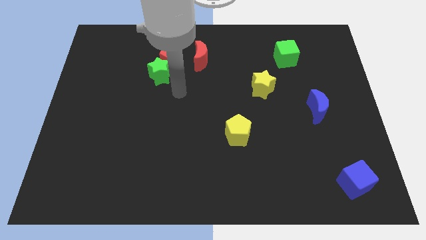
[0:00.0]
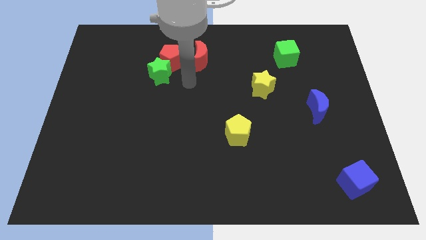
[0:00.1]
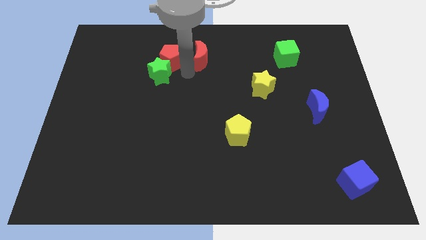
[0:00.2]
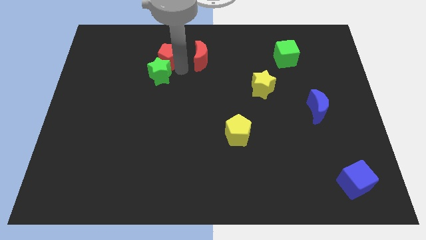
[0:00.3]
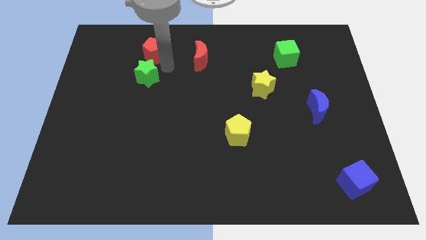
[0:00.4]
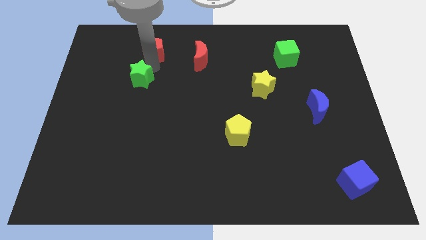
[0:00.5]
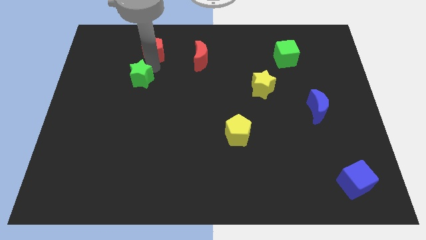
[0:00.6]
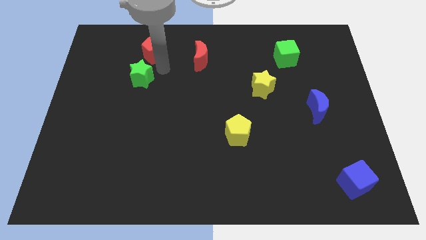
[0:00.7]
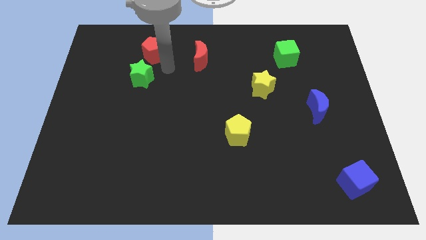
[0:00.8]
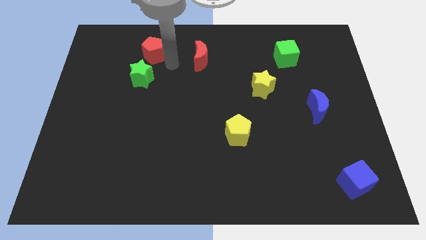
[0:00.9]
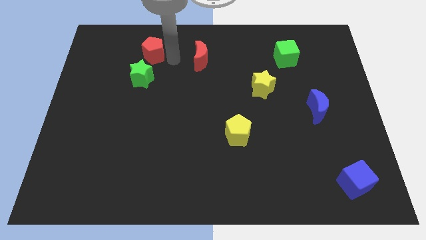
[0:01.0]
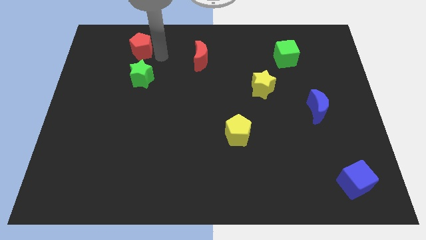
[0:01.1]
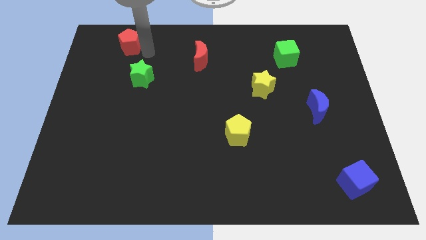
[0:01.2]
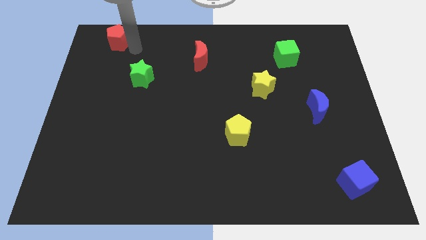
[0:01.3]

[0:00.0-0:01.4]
move the red pentagon away from the green star

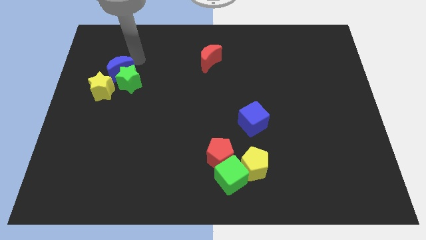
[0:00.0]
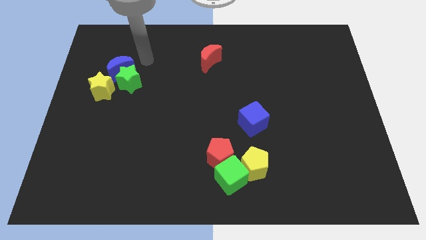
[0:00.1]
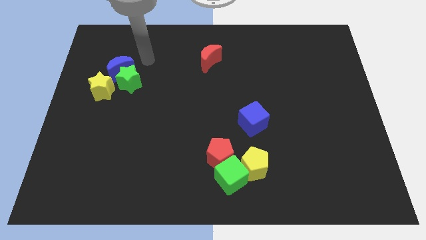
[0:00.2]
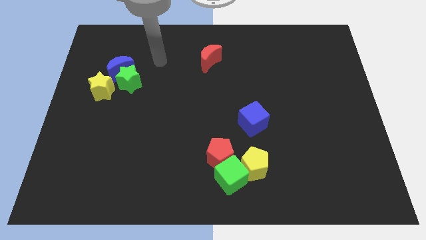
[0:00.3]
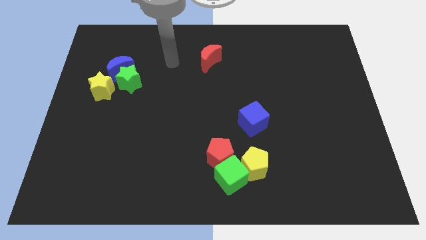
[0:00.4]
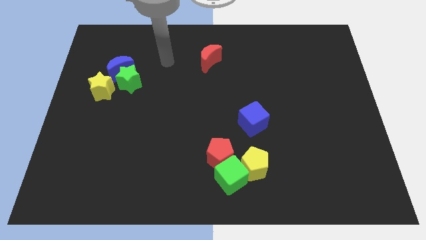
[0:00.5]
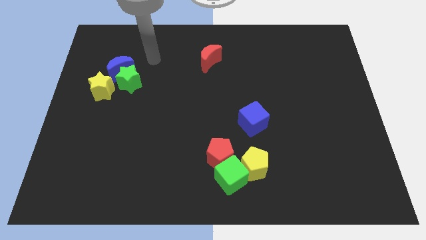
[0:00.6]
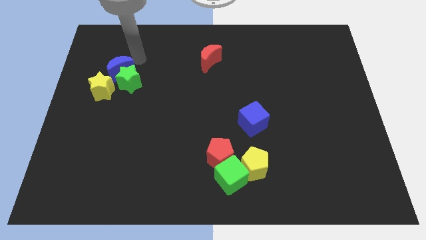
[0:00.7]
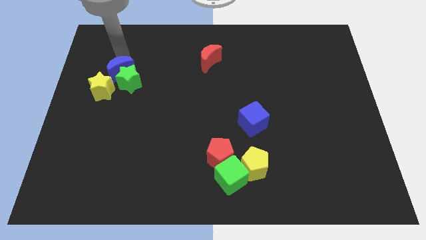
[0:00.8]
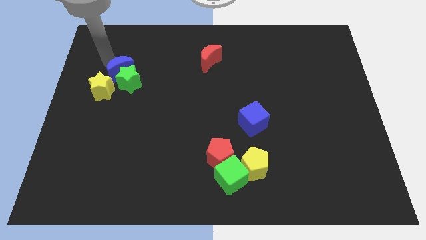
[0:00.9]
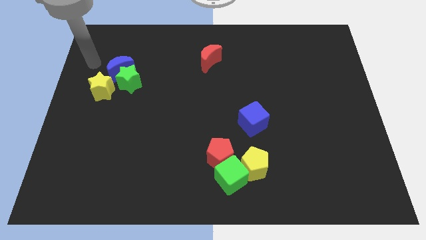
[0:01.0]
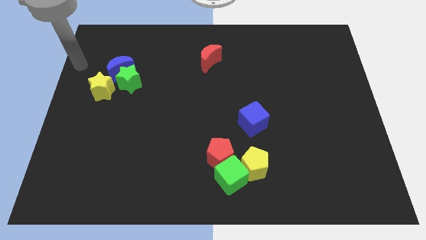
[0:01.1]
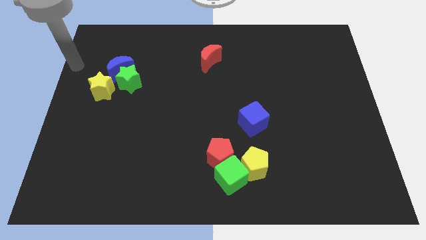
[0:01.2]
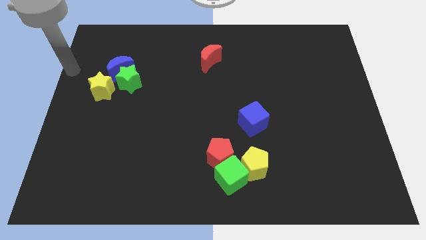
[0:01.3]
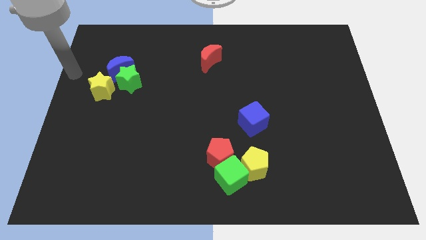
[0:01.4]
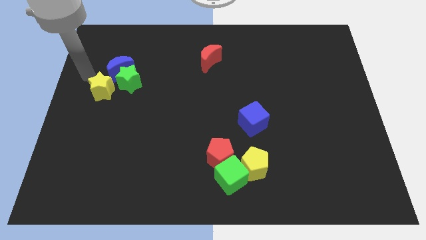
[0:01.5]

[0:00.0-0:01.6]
point the arm to the left of the blue moon

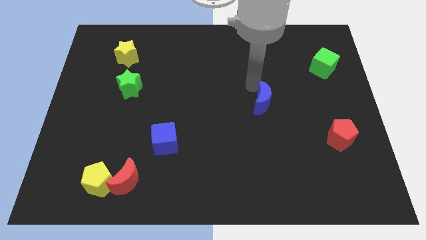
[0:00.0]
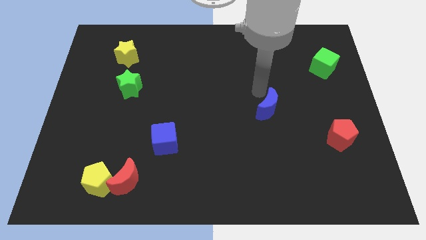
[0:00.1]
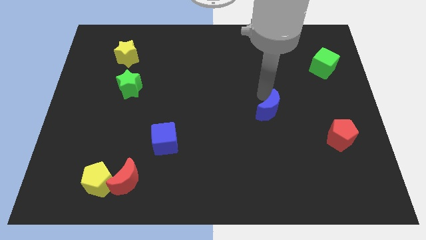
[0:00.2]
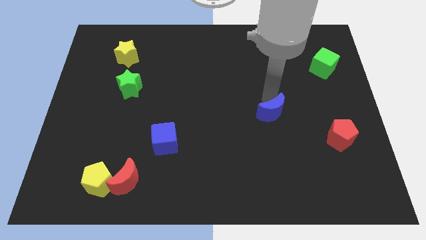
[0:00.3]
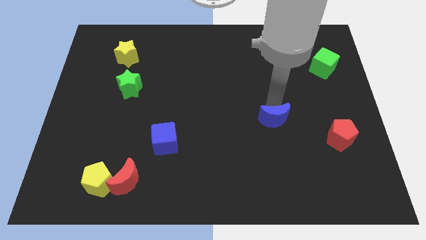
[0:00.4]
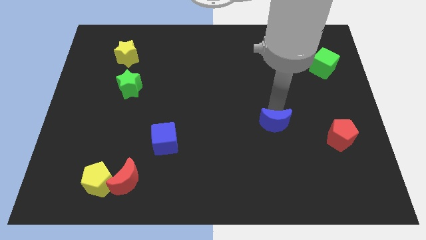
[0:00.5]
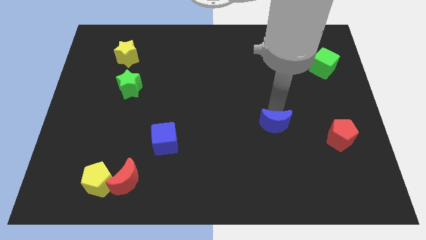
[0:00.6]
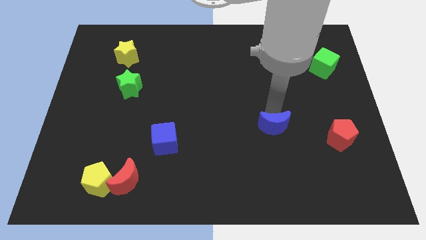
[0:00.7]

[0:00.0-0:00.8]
push blue moon slightly downwards

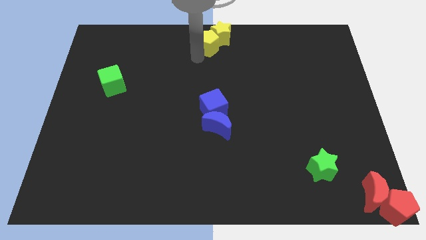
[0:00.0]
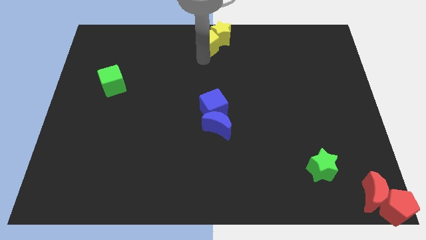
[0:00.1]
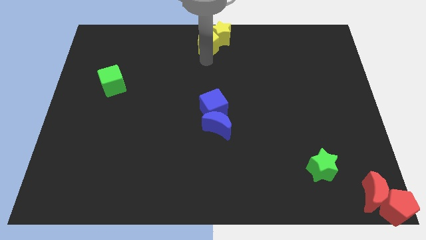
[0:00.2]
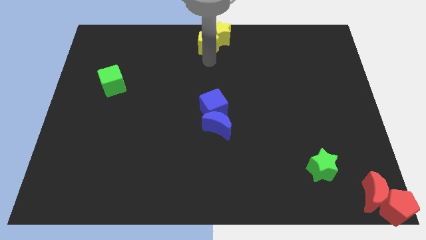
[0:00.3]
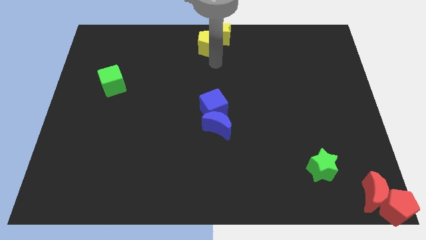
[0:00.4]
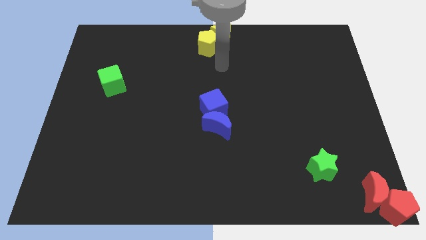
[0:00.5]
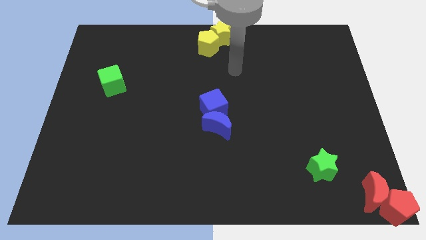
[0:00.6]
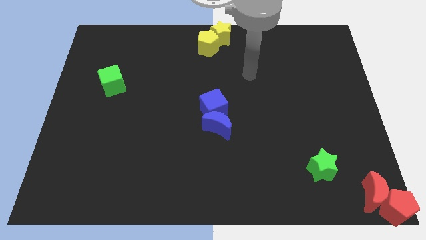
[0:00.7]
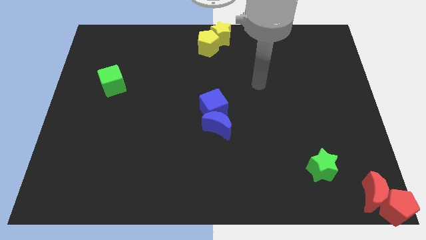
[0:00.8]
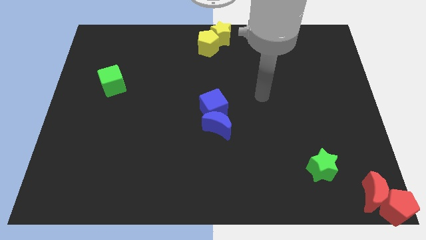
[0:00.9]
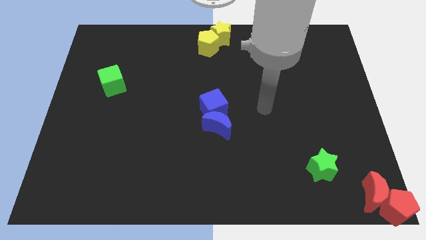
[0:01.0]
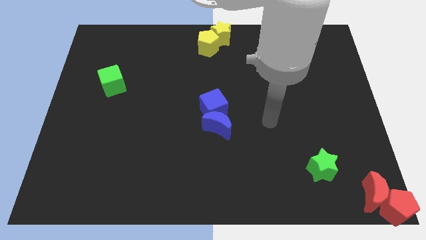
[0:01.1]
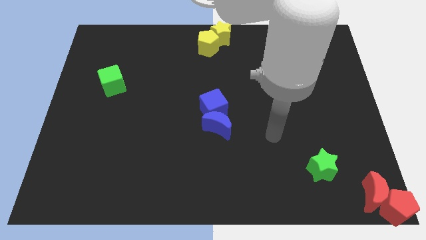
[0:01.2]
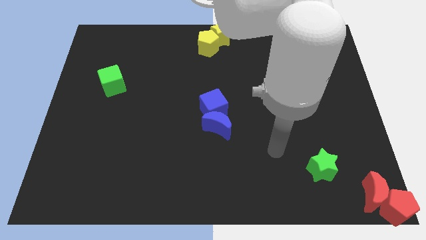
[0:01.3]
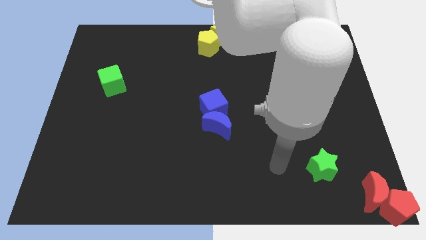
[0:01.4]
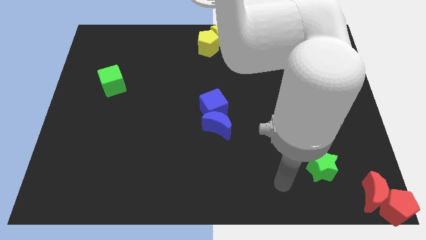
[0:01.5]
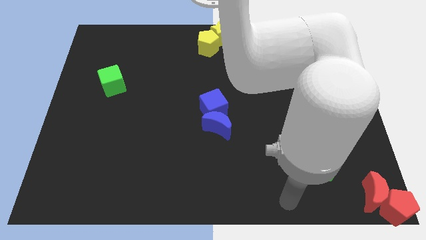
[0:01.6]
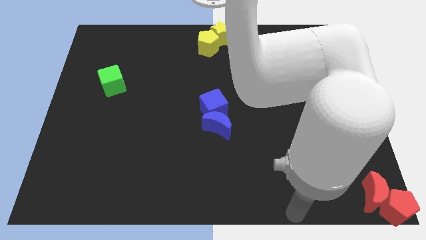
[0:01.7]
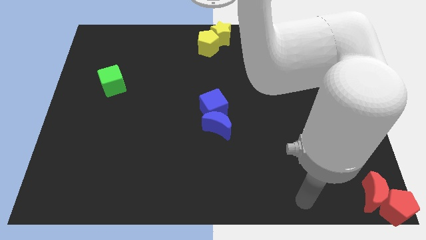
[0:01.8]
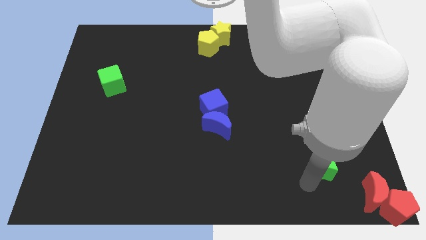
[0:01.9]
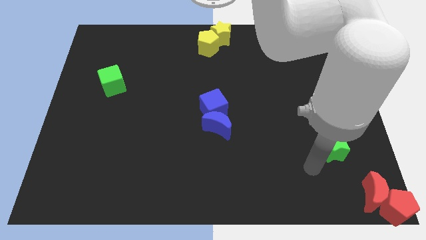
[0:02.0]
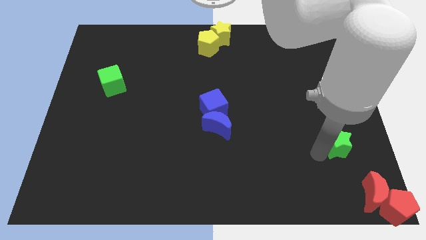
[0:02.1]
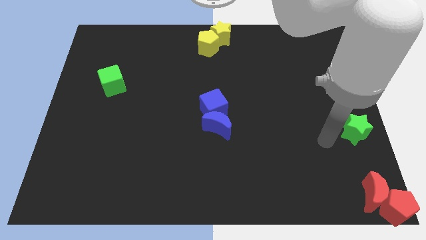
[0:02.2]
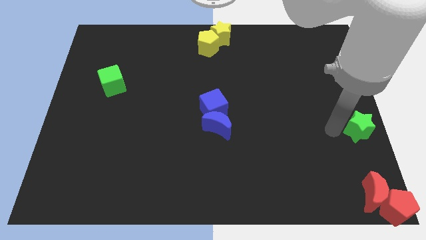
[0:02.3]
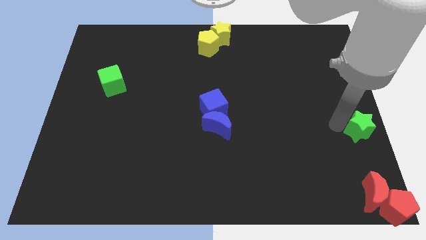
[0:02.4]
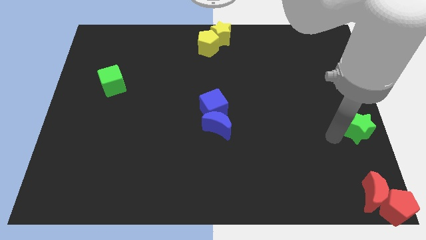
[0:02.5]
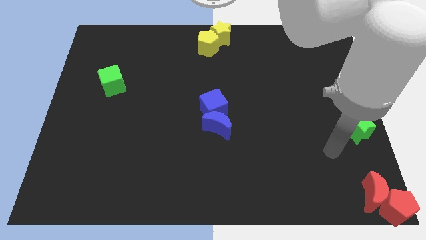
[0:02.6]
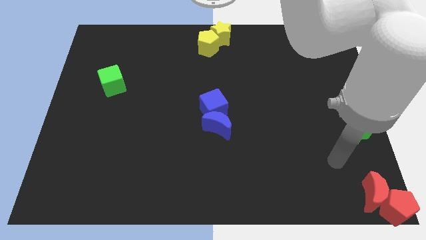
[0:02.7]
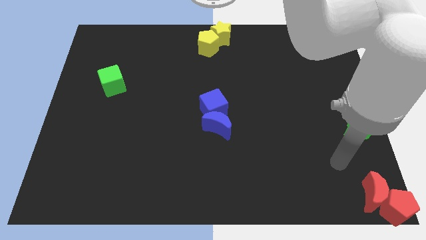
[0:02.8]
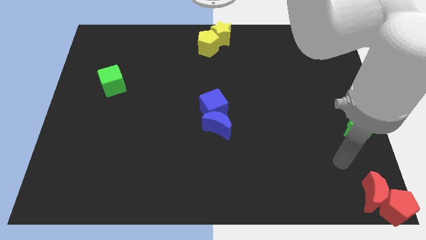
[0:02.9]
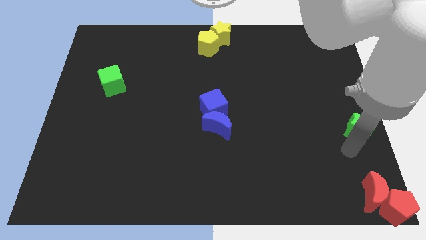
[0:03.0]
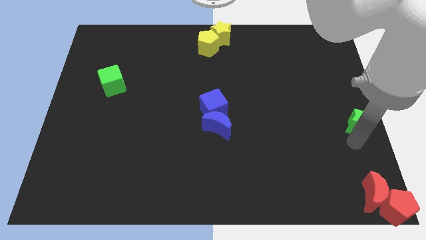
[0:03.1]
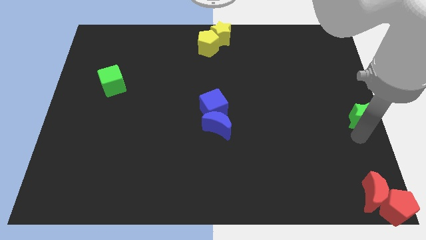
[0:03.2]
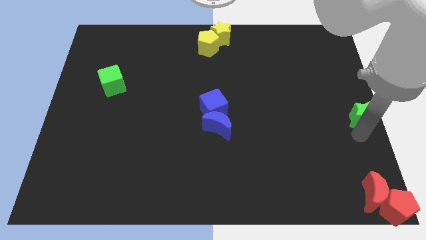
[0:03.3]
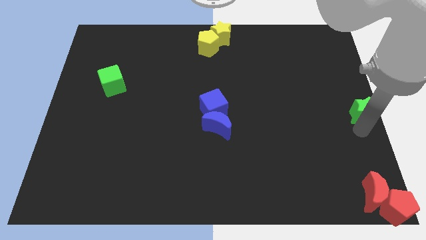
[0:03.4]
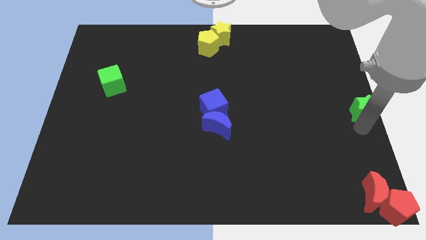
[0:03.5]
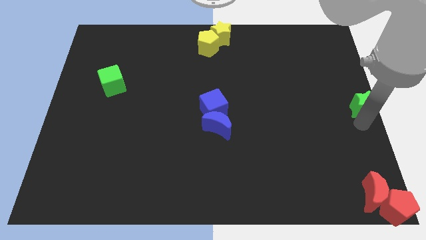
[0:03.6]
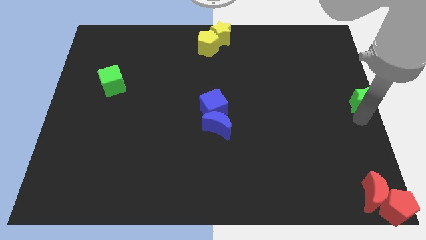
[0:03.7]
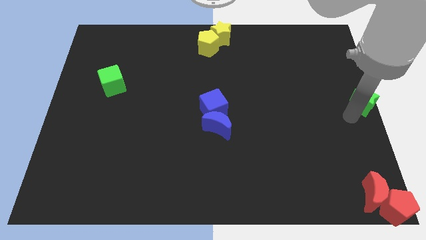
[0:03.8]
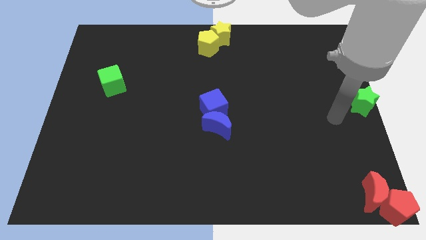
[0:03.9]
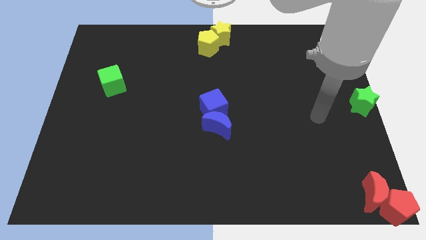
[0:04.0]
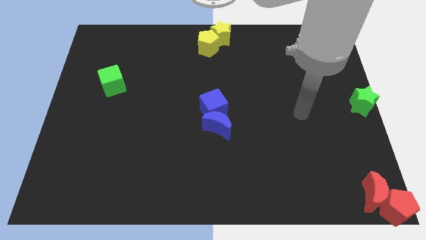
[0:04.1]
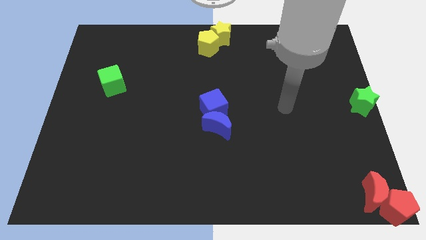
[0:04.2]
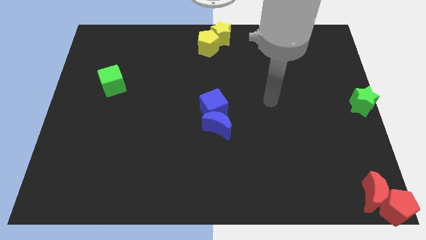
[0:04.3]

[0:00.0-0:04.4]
move the green star to the right center of the board

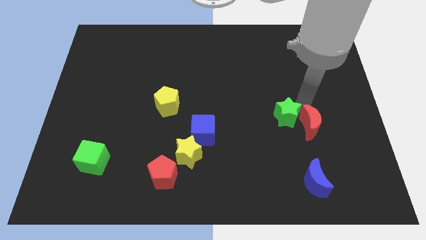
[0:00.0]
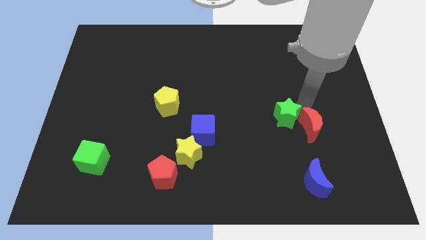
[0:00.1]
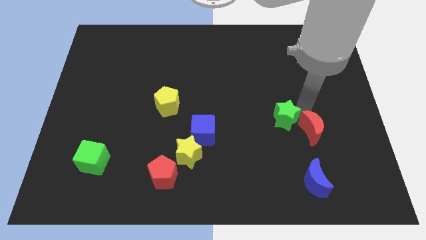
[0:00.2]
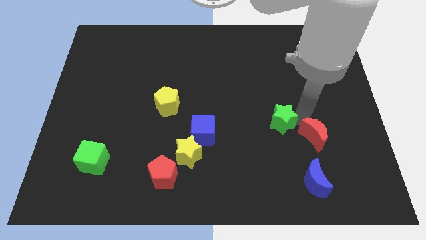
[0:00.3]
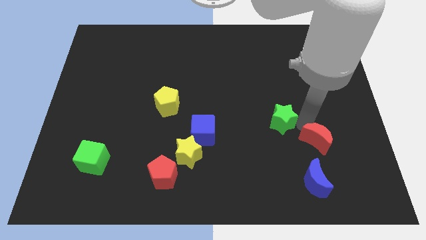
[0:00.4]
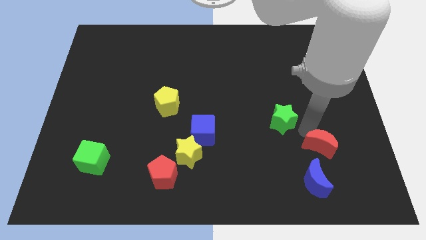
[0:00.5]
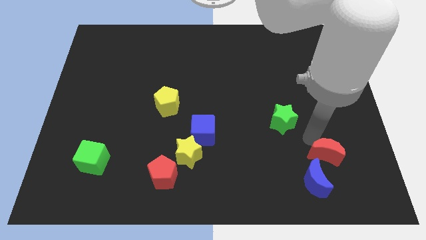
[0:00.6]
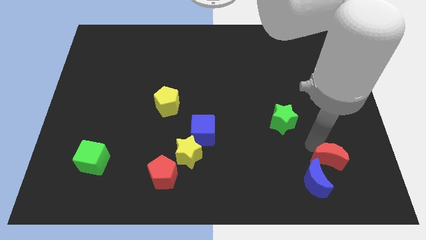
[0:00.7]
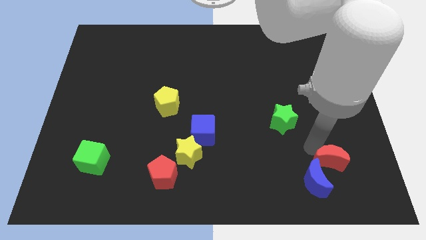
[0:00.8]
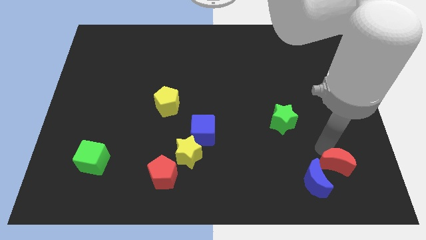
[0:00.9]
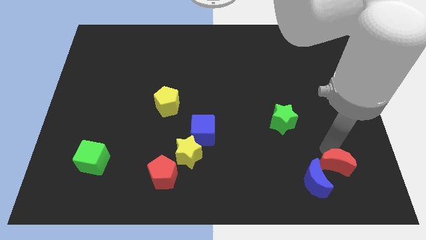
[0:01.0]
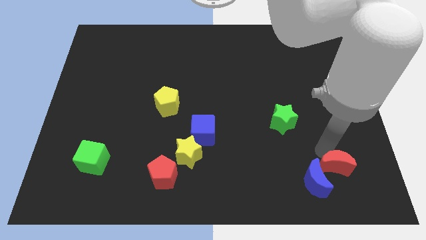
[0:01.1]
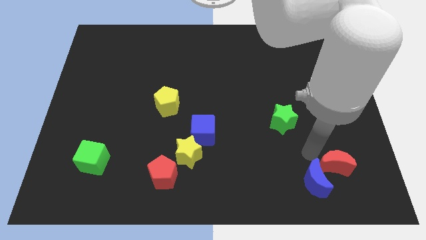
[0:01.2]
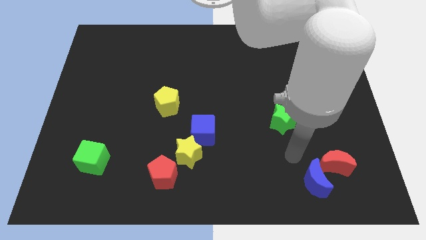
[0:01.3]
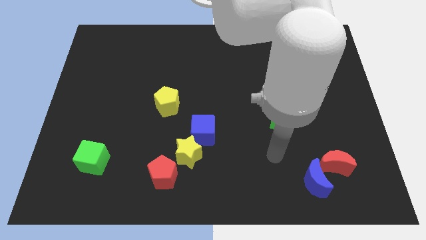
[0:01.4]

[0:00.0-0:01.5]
move the red moon into the blue moon
